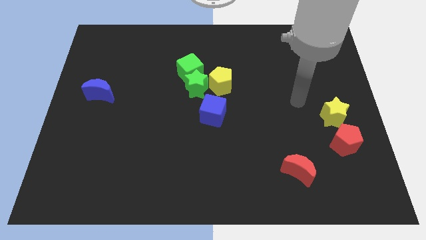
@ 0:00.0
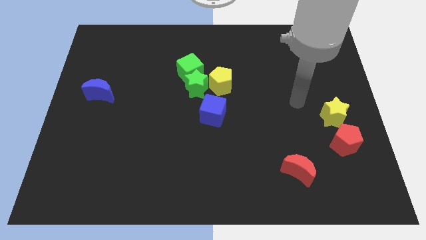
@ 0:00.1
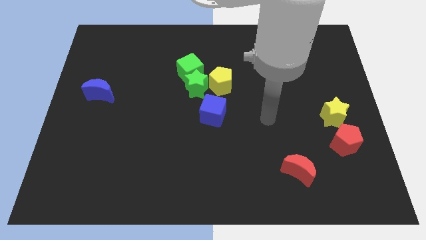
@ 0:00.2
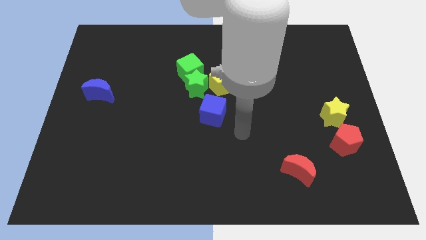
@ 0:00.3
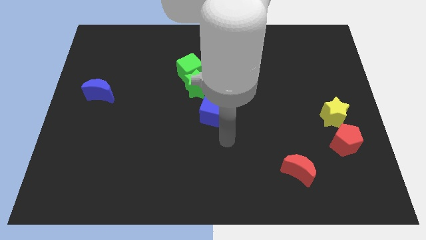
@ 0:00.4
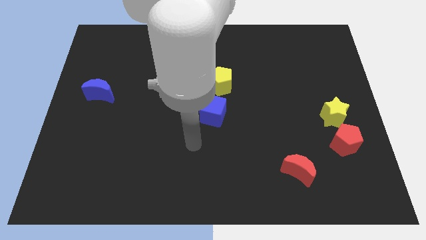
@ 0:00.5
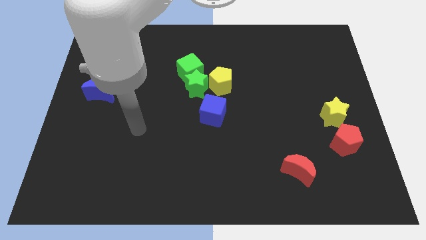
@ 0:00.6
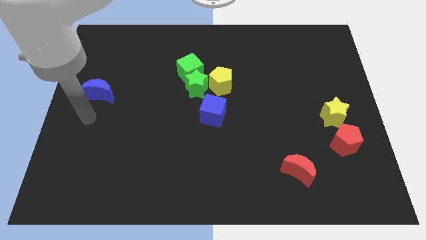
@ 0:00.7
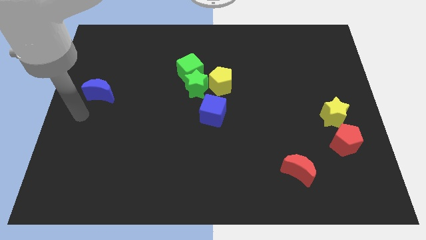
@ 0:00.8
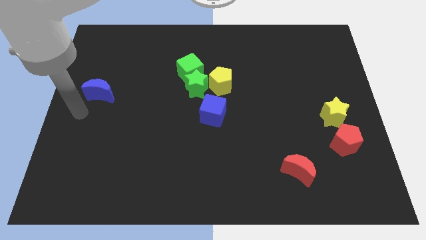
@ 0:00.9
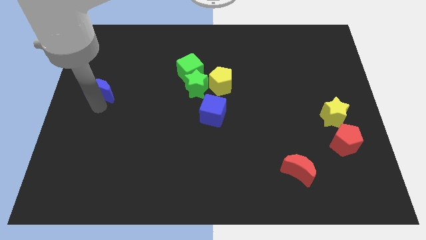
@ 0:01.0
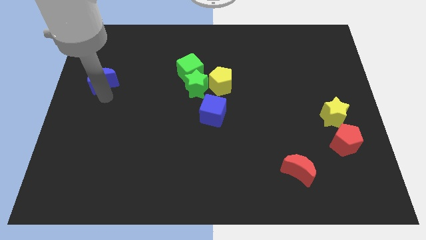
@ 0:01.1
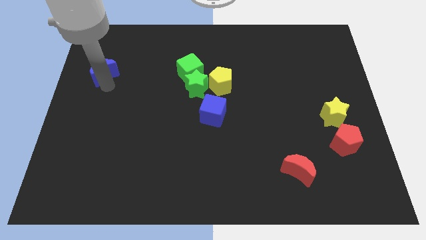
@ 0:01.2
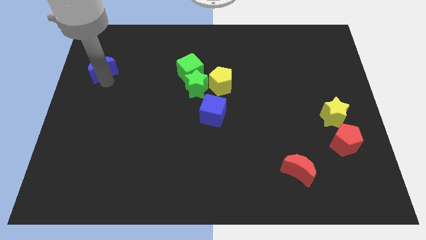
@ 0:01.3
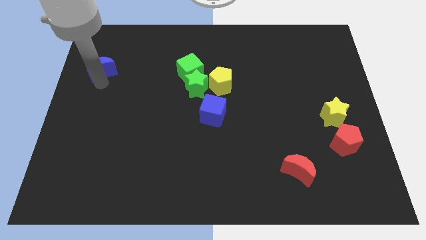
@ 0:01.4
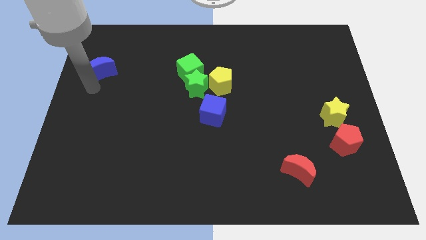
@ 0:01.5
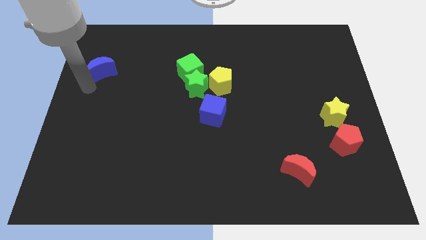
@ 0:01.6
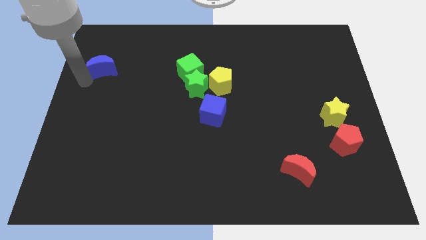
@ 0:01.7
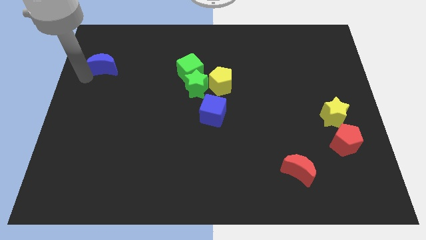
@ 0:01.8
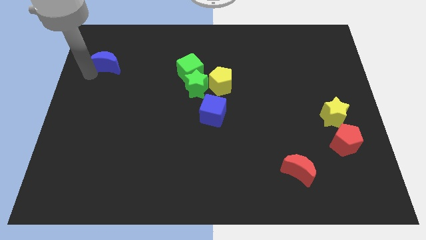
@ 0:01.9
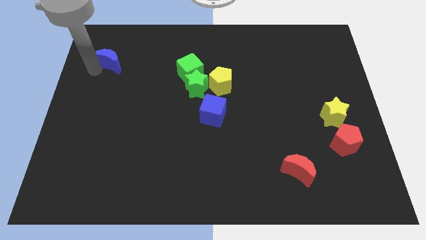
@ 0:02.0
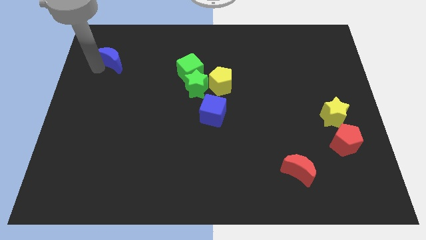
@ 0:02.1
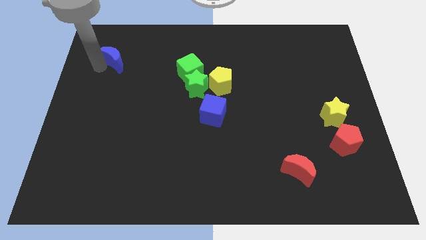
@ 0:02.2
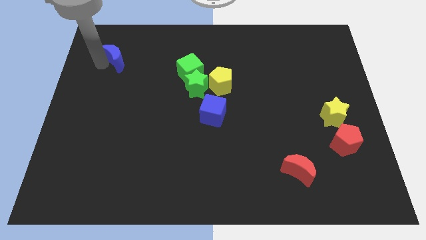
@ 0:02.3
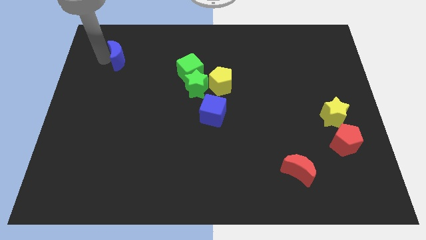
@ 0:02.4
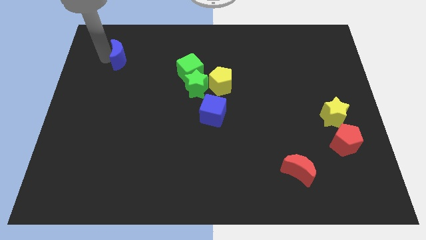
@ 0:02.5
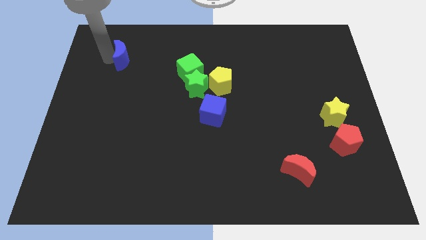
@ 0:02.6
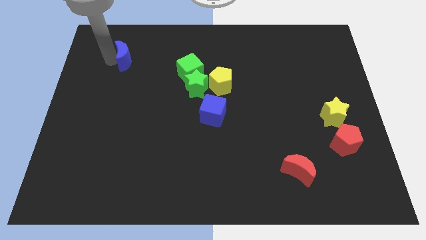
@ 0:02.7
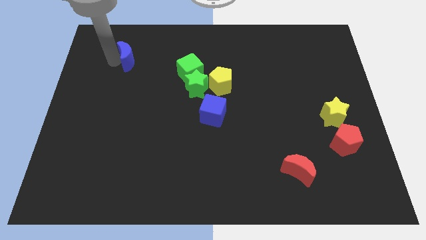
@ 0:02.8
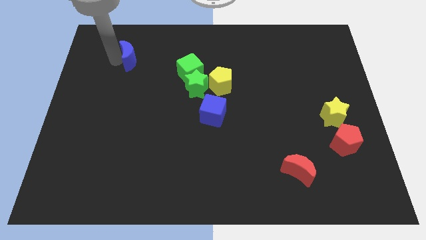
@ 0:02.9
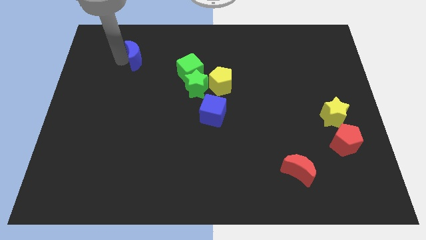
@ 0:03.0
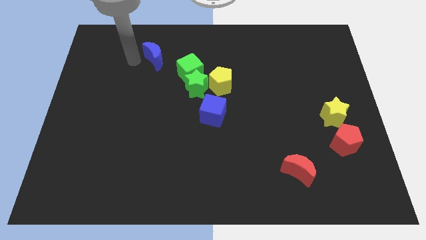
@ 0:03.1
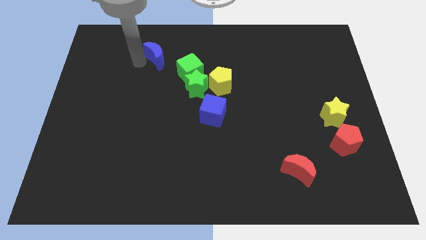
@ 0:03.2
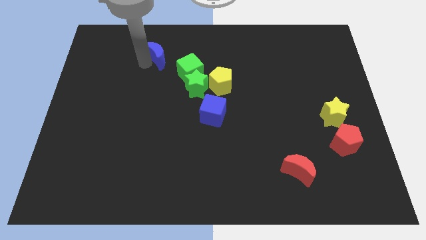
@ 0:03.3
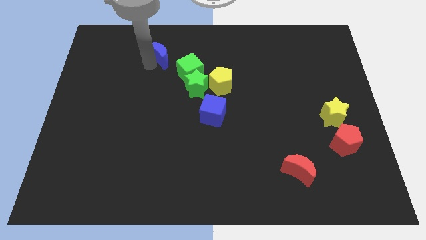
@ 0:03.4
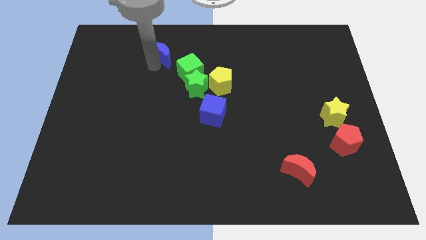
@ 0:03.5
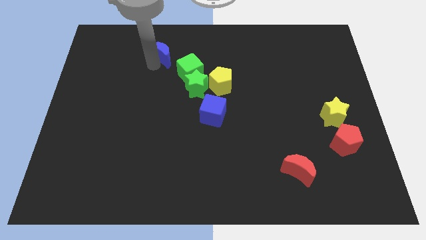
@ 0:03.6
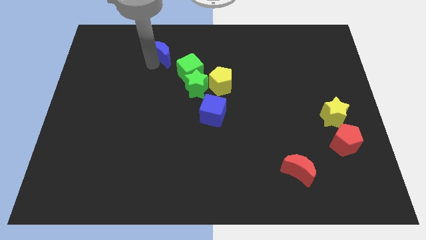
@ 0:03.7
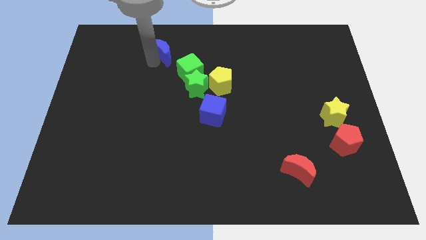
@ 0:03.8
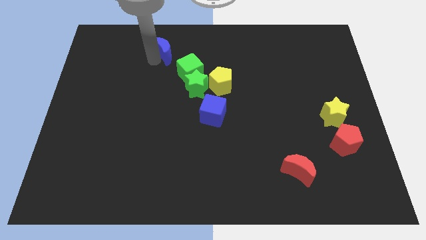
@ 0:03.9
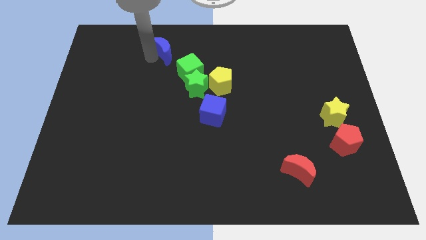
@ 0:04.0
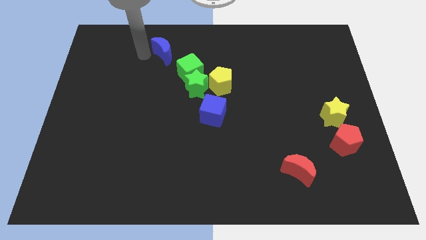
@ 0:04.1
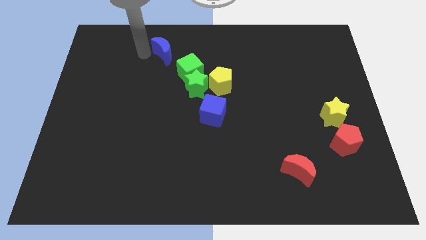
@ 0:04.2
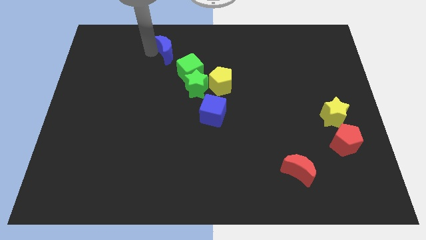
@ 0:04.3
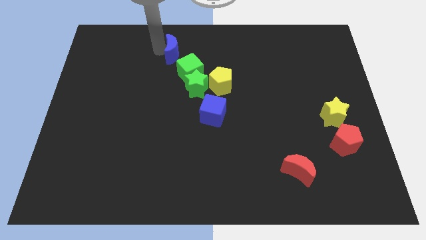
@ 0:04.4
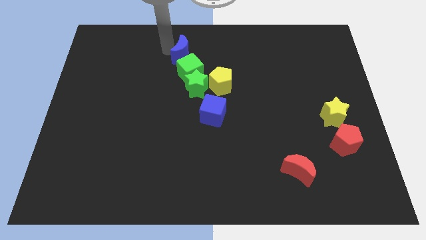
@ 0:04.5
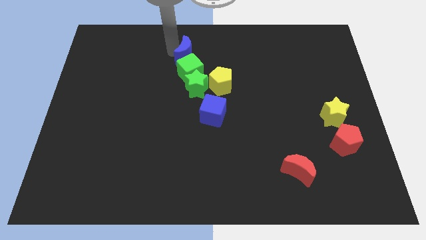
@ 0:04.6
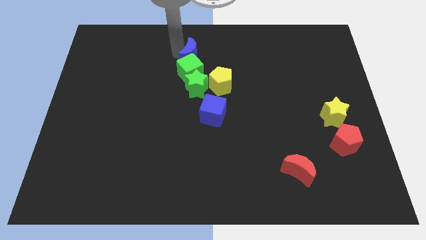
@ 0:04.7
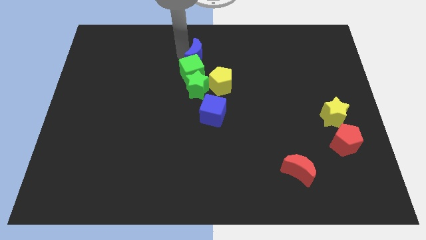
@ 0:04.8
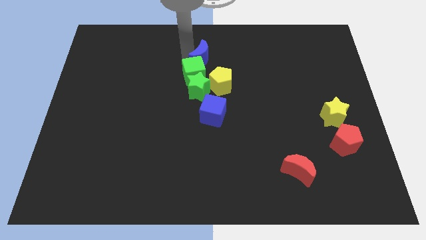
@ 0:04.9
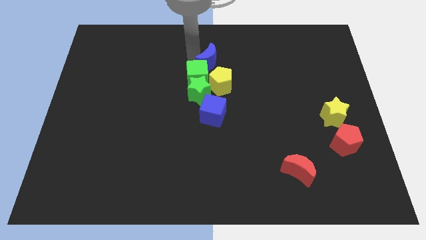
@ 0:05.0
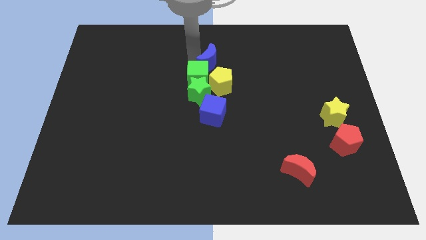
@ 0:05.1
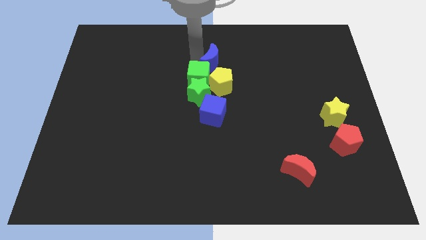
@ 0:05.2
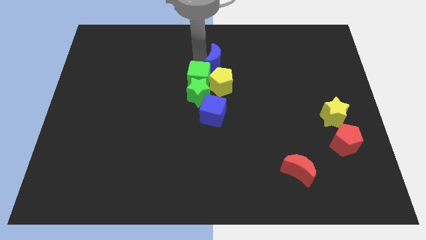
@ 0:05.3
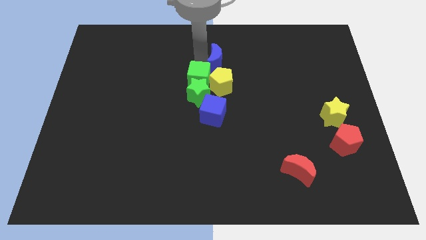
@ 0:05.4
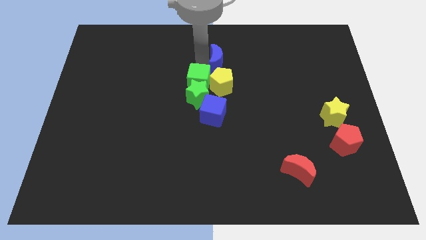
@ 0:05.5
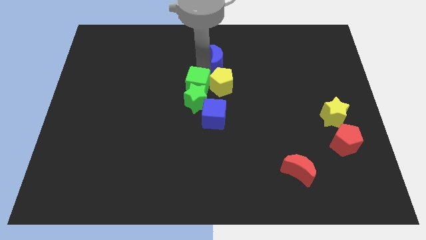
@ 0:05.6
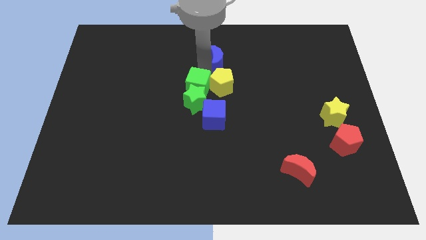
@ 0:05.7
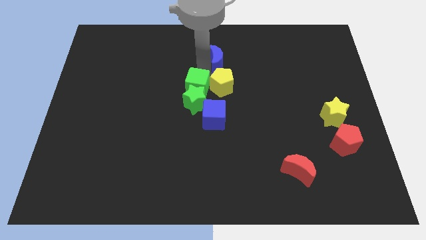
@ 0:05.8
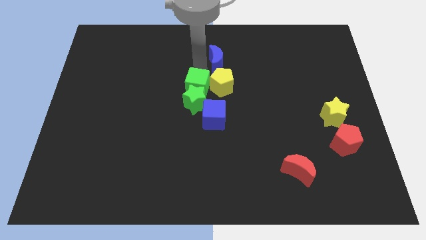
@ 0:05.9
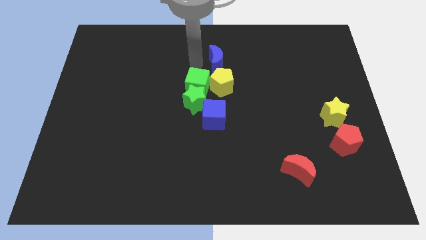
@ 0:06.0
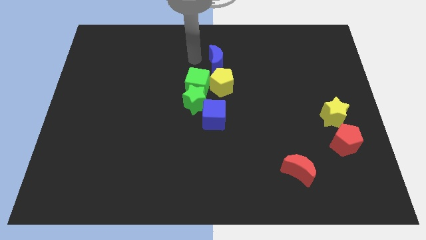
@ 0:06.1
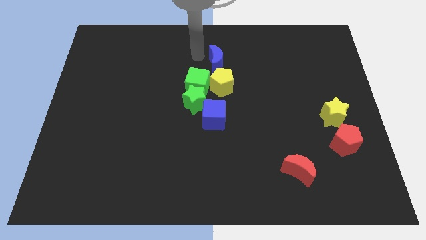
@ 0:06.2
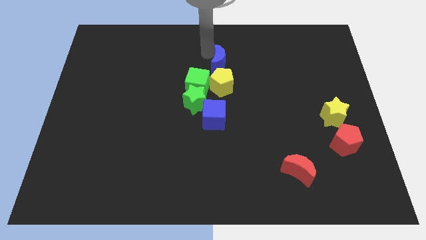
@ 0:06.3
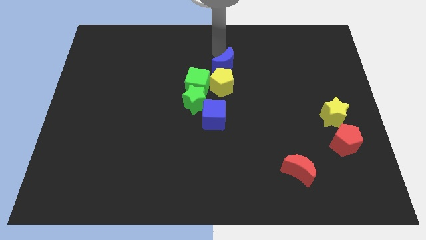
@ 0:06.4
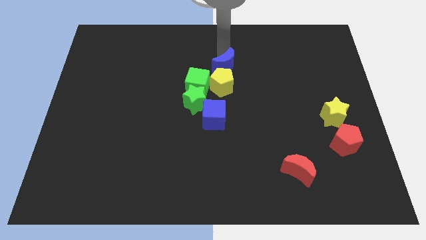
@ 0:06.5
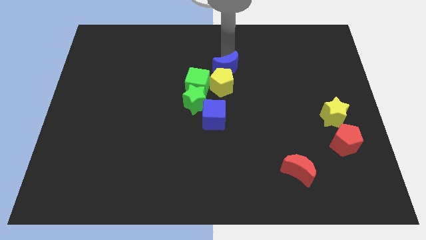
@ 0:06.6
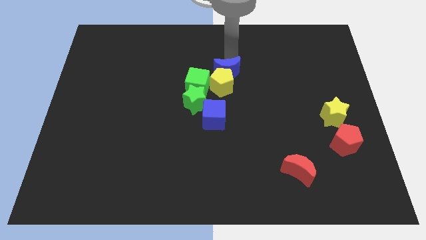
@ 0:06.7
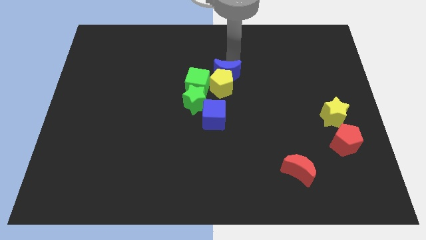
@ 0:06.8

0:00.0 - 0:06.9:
push the blue moon close to the yellow pentagon

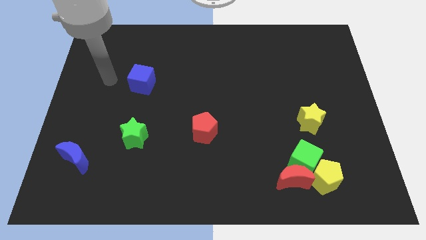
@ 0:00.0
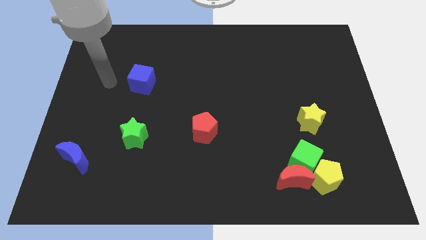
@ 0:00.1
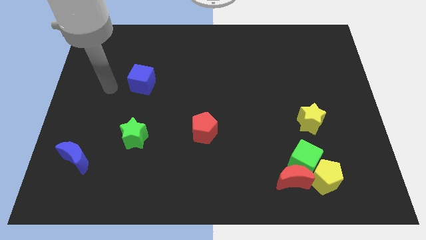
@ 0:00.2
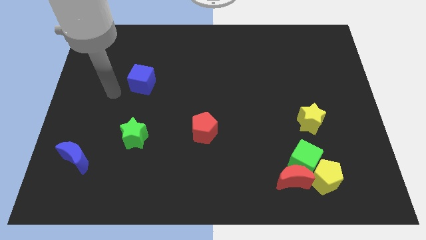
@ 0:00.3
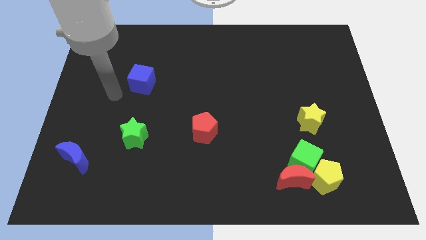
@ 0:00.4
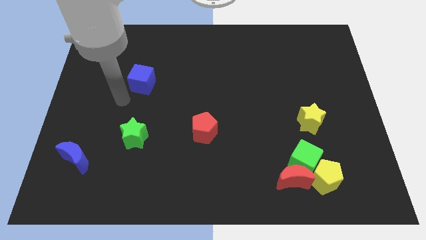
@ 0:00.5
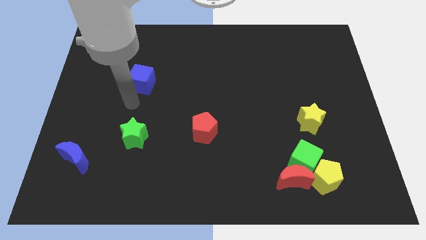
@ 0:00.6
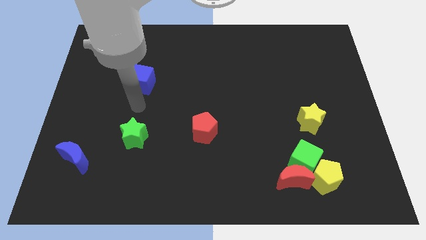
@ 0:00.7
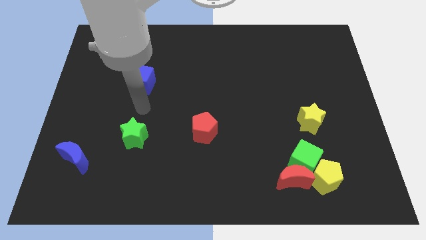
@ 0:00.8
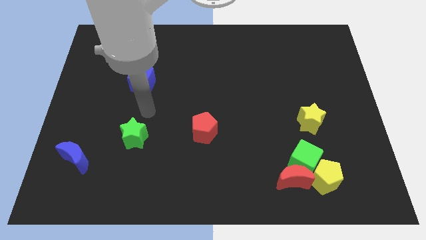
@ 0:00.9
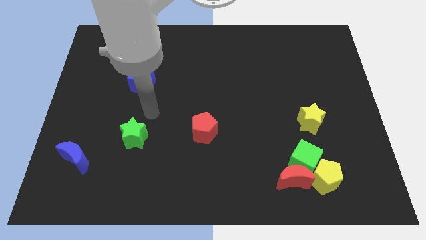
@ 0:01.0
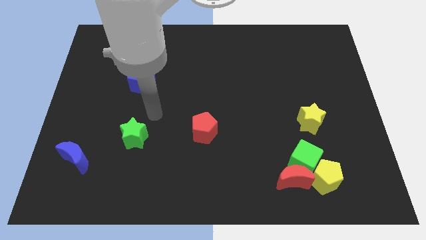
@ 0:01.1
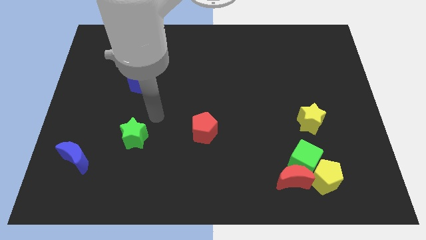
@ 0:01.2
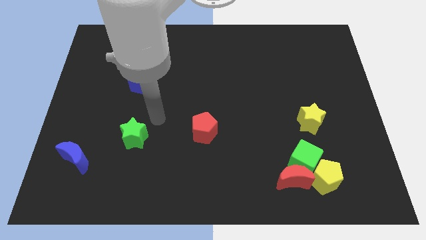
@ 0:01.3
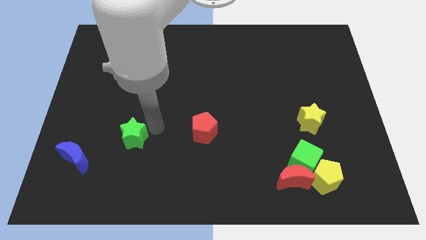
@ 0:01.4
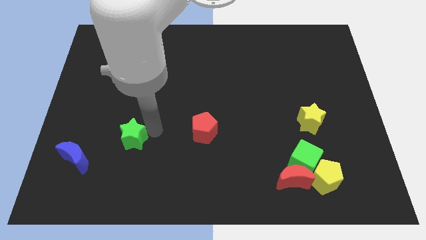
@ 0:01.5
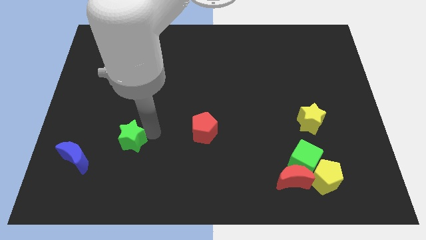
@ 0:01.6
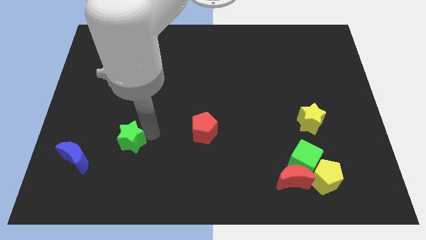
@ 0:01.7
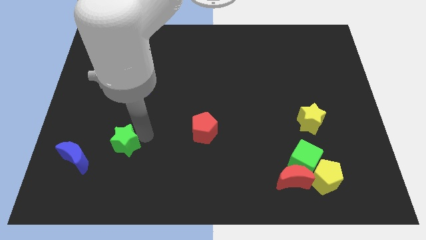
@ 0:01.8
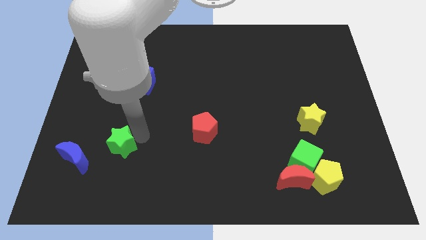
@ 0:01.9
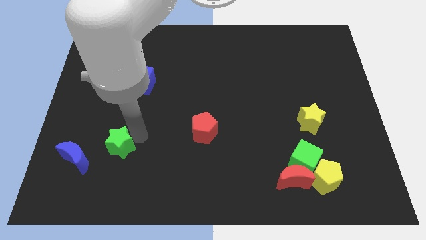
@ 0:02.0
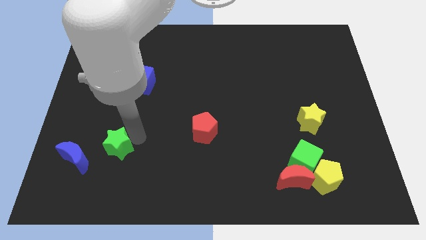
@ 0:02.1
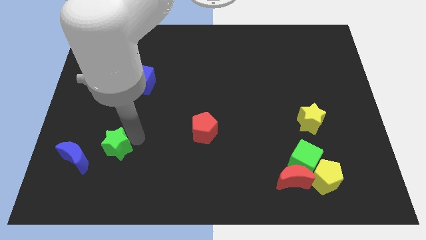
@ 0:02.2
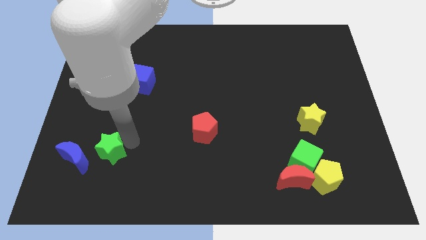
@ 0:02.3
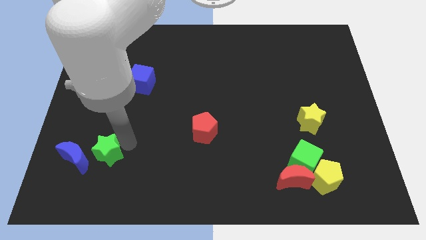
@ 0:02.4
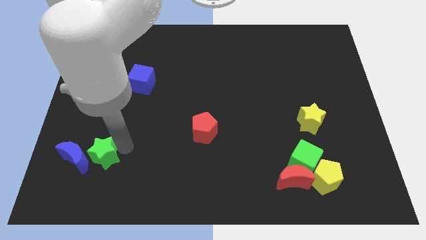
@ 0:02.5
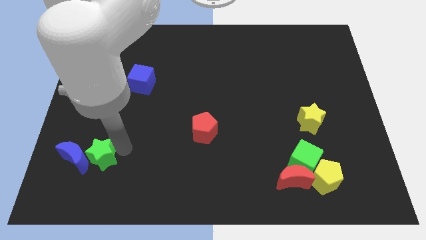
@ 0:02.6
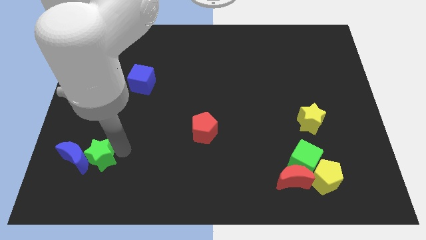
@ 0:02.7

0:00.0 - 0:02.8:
push the green star to the blue moon
